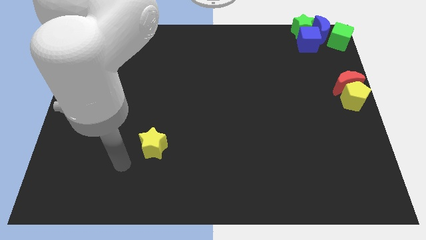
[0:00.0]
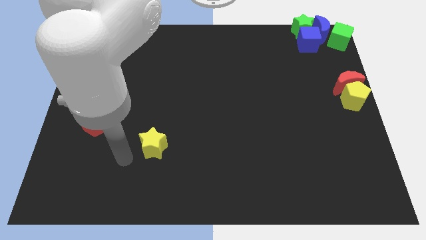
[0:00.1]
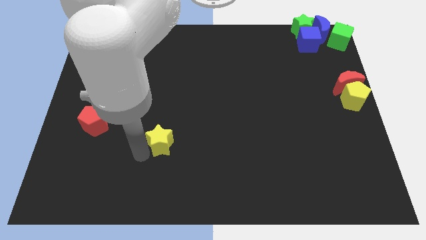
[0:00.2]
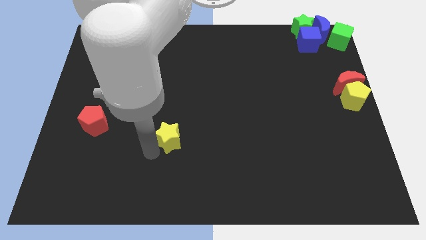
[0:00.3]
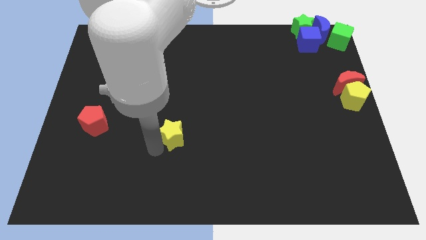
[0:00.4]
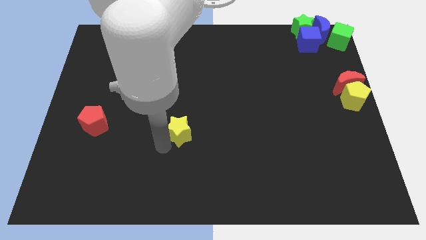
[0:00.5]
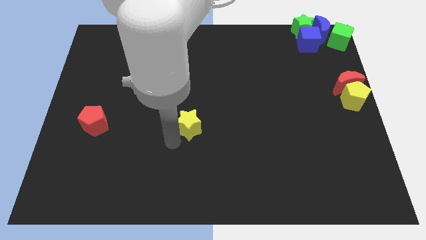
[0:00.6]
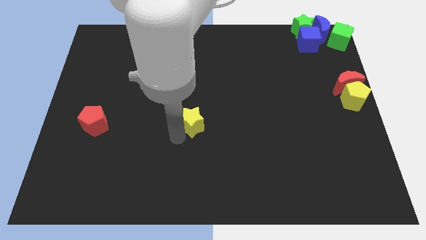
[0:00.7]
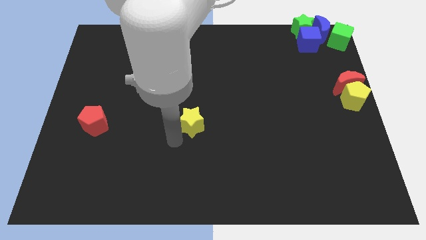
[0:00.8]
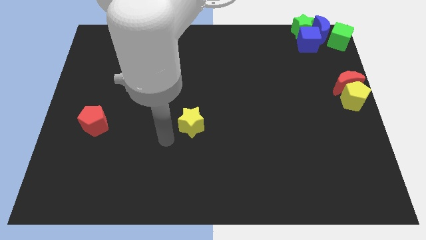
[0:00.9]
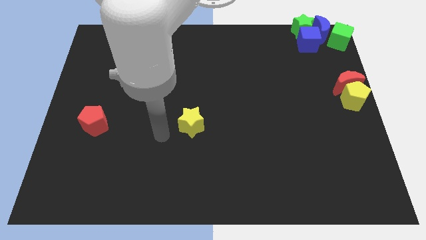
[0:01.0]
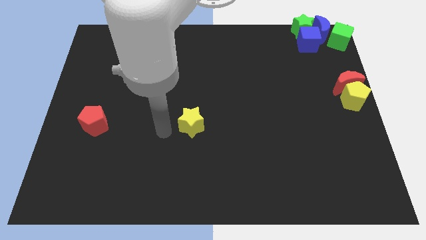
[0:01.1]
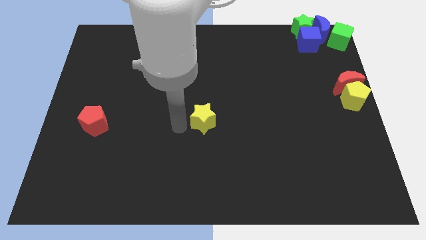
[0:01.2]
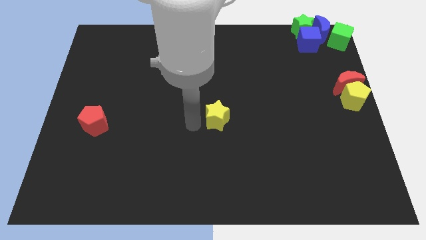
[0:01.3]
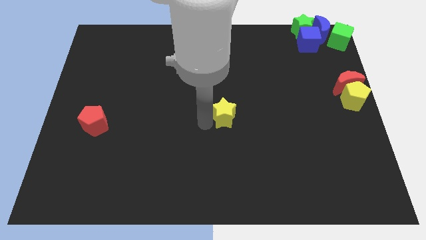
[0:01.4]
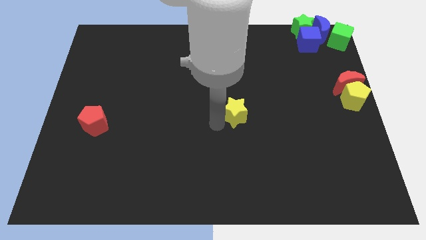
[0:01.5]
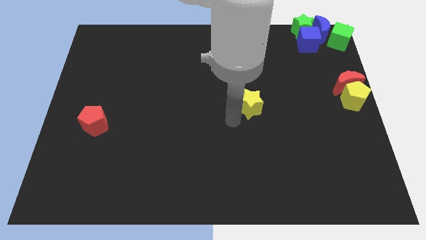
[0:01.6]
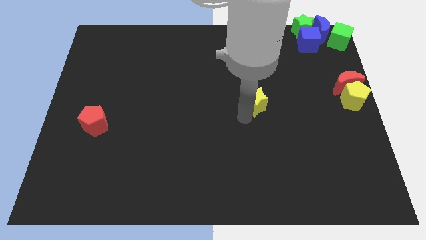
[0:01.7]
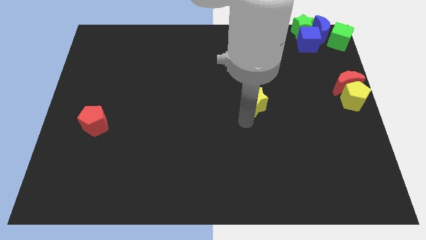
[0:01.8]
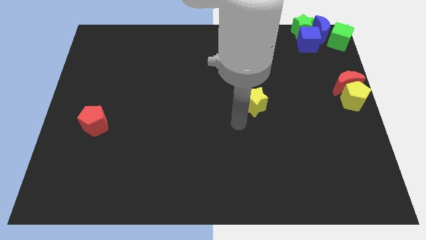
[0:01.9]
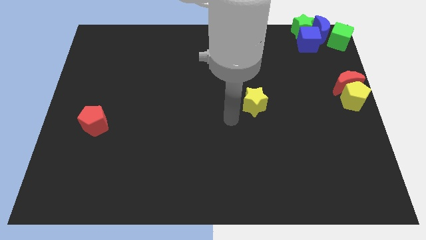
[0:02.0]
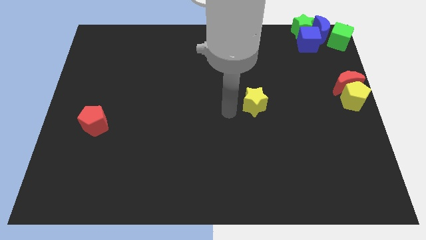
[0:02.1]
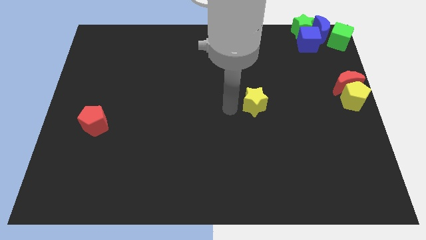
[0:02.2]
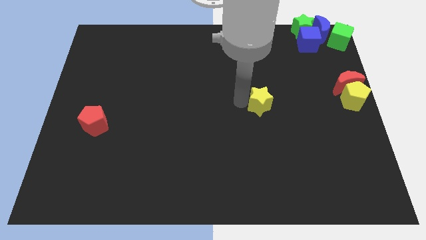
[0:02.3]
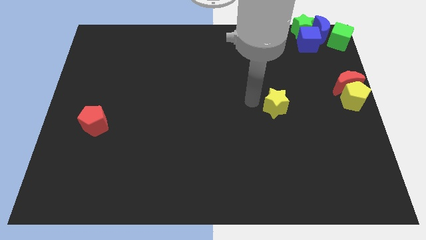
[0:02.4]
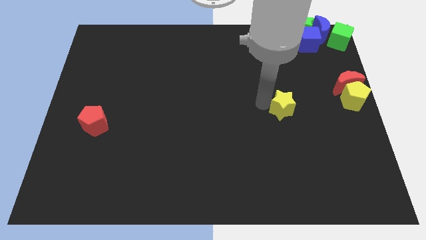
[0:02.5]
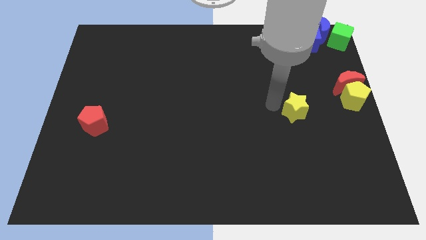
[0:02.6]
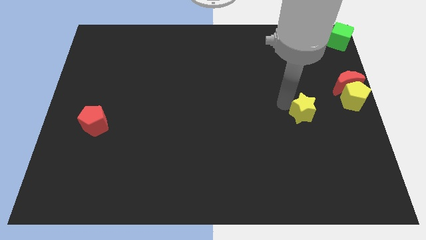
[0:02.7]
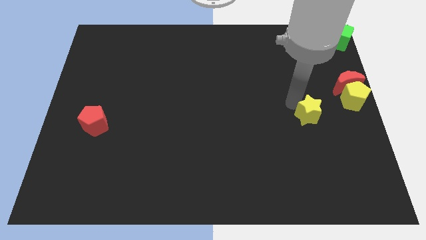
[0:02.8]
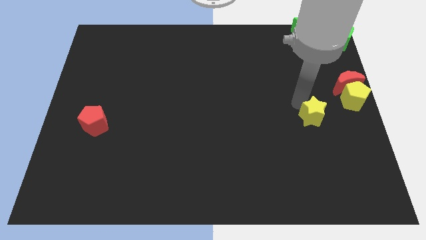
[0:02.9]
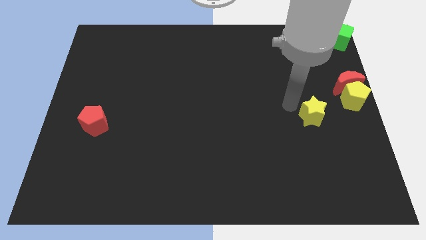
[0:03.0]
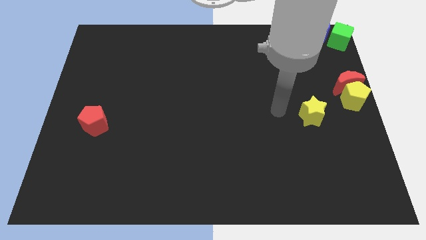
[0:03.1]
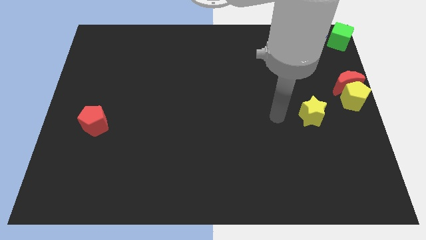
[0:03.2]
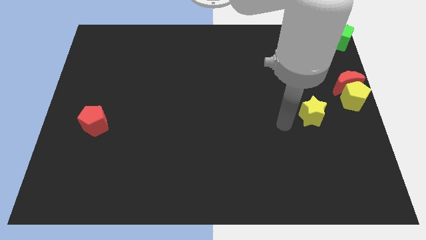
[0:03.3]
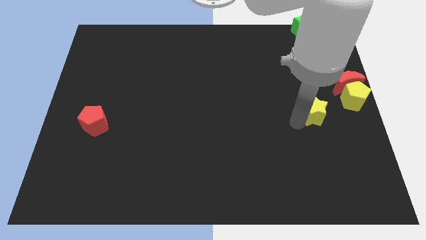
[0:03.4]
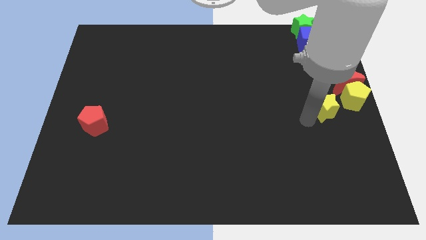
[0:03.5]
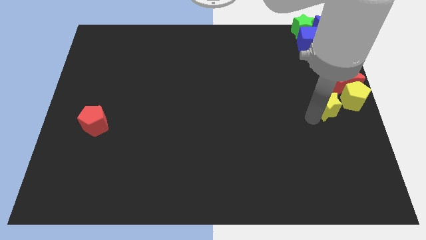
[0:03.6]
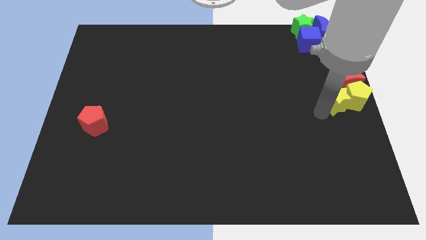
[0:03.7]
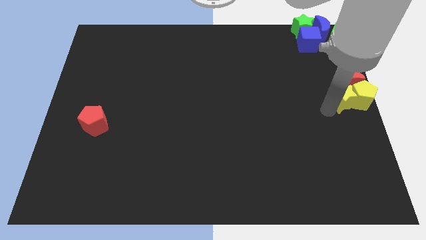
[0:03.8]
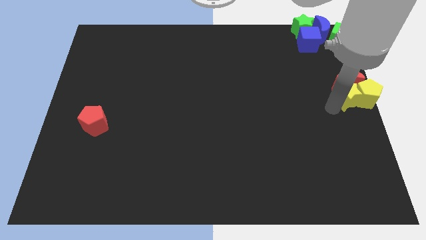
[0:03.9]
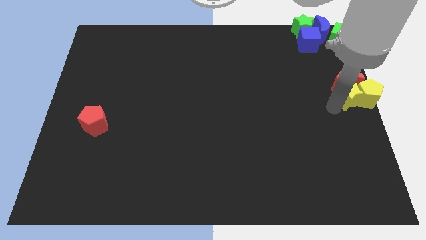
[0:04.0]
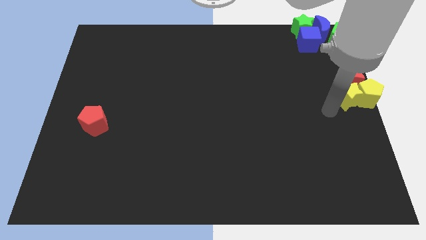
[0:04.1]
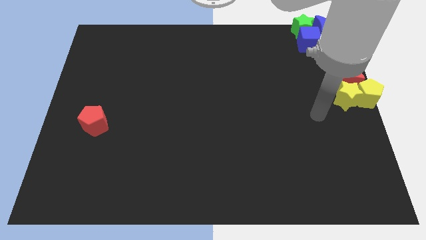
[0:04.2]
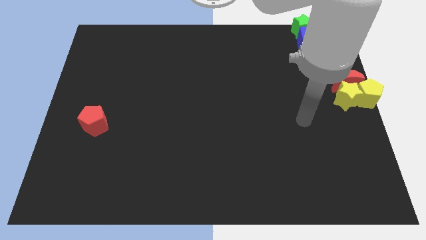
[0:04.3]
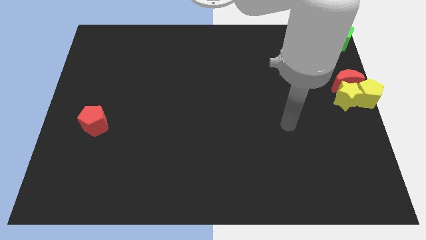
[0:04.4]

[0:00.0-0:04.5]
move yellow star to the left of yellow pentagon

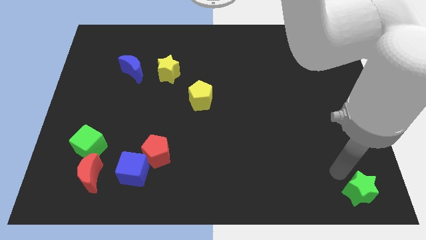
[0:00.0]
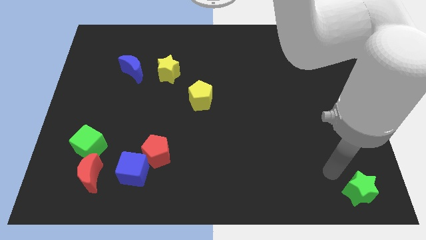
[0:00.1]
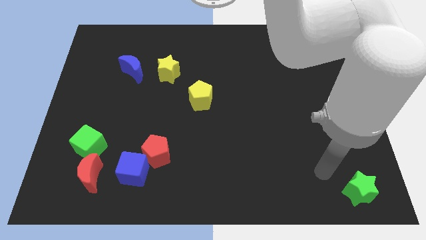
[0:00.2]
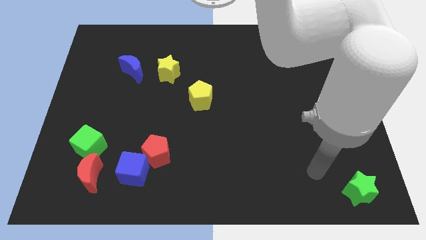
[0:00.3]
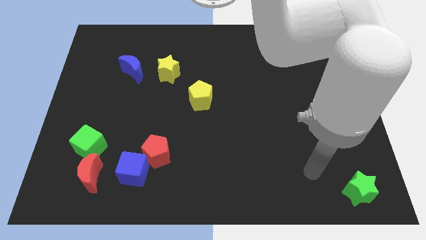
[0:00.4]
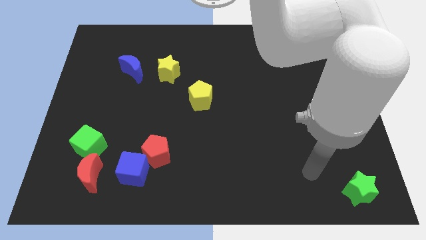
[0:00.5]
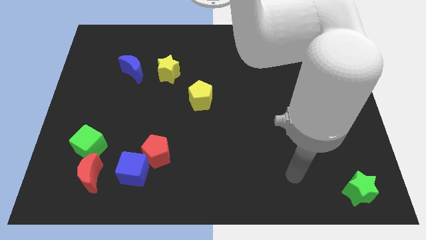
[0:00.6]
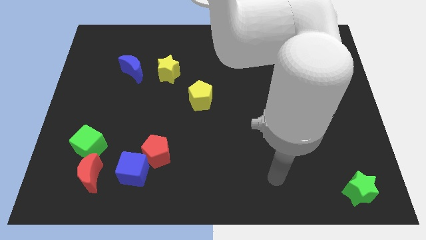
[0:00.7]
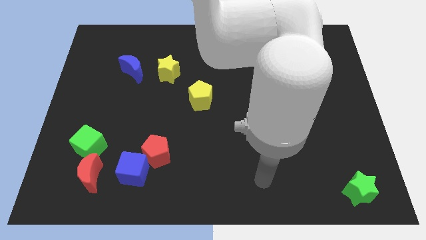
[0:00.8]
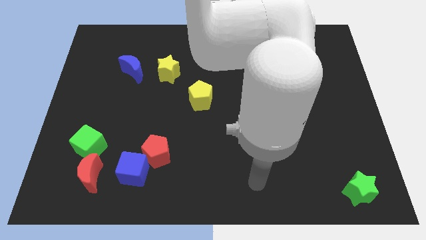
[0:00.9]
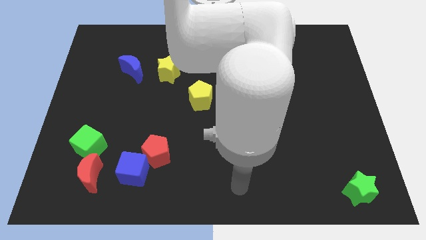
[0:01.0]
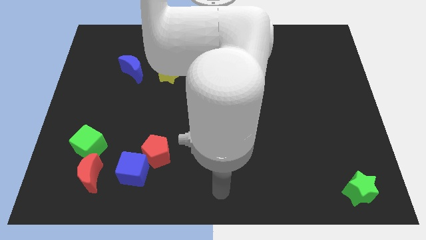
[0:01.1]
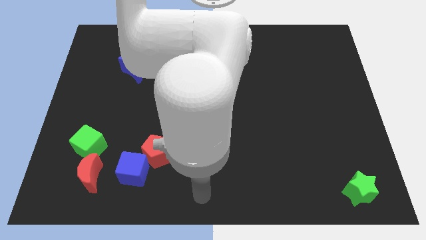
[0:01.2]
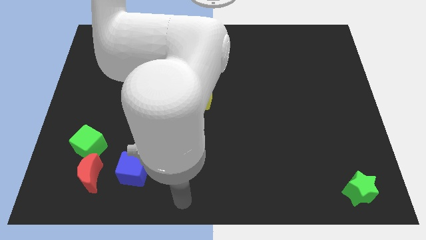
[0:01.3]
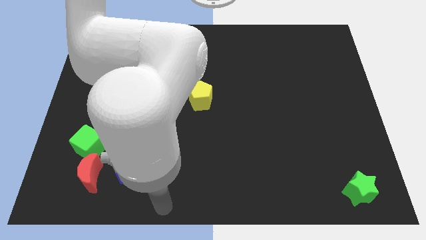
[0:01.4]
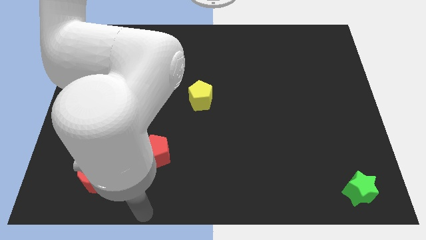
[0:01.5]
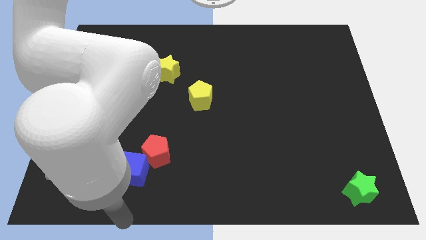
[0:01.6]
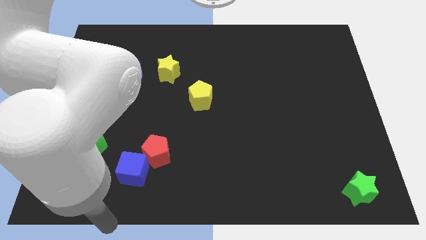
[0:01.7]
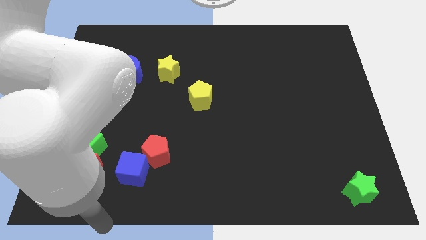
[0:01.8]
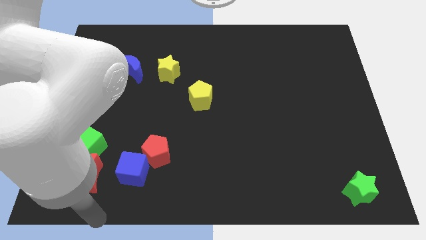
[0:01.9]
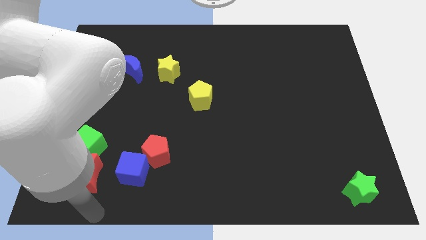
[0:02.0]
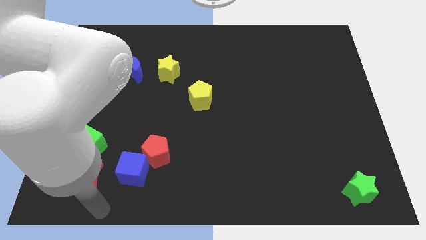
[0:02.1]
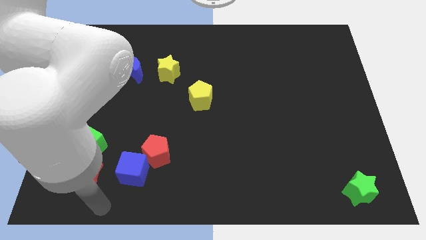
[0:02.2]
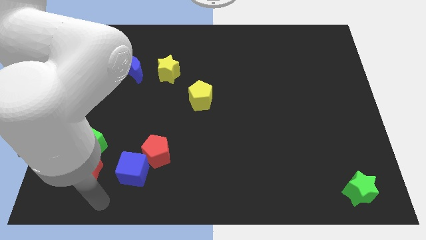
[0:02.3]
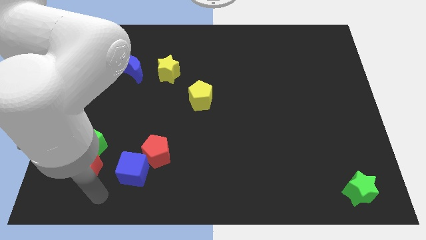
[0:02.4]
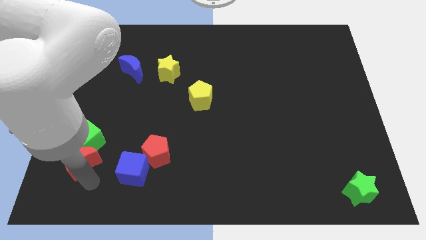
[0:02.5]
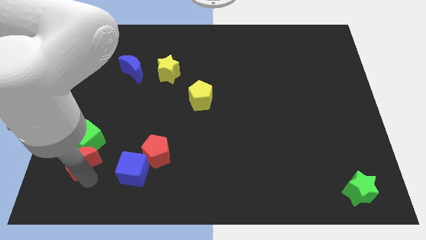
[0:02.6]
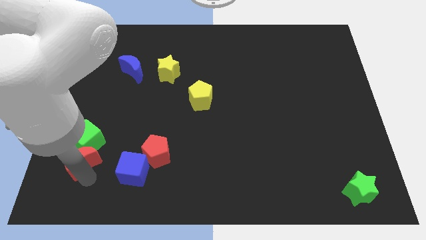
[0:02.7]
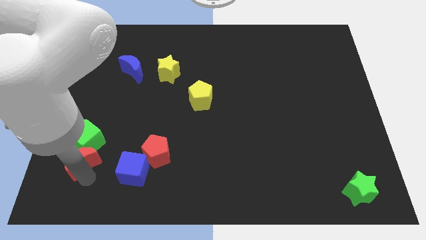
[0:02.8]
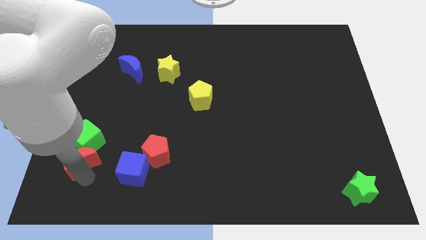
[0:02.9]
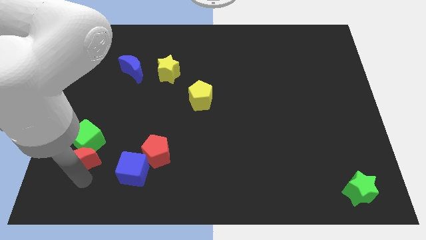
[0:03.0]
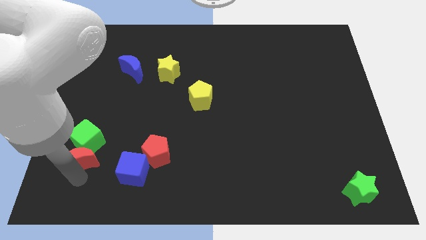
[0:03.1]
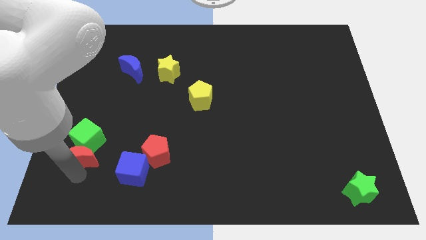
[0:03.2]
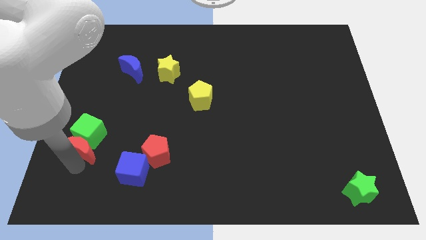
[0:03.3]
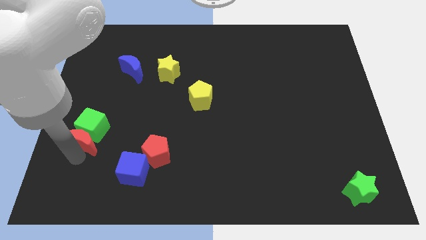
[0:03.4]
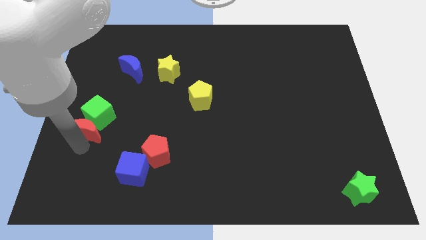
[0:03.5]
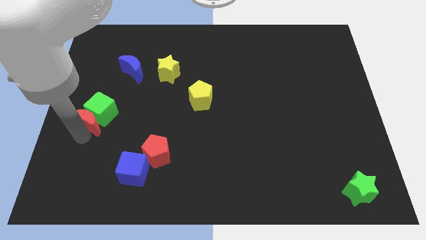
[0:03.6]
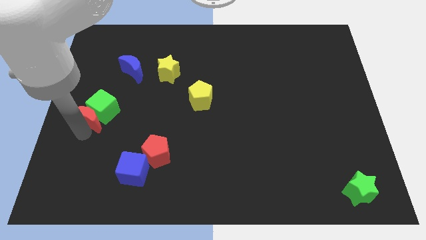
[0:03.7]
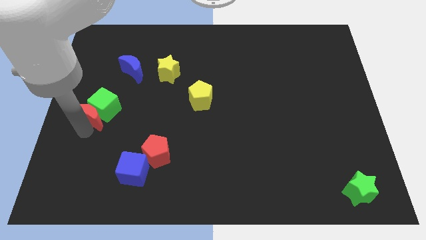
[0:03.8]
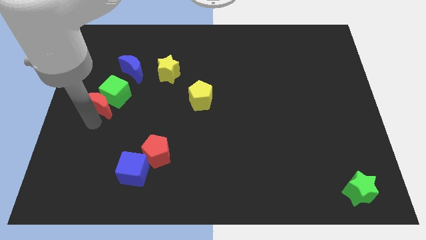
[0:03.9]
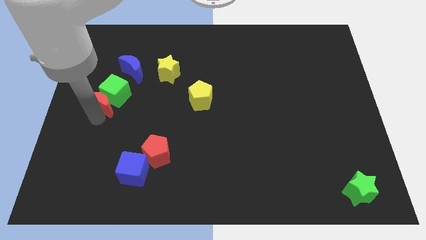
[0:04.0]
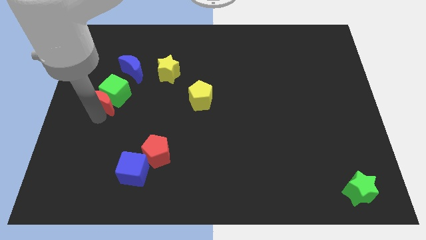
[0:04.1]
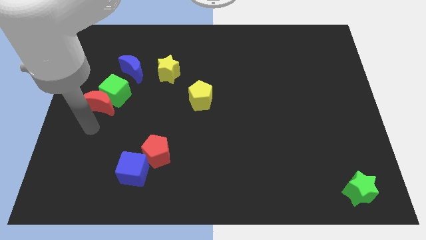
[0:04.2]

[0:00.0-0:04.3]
push the green cube with red crescent towards the blue moon
